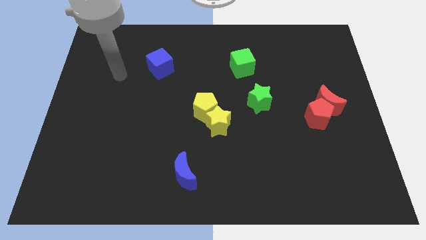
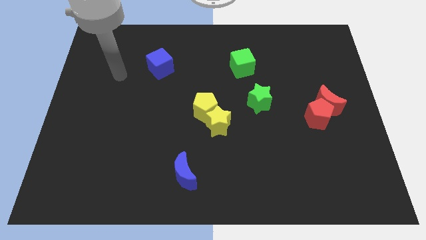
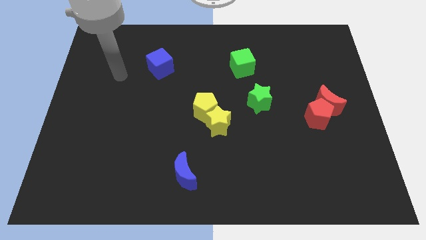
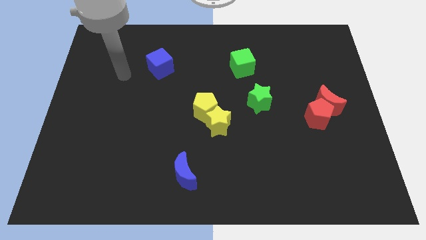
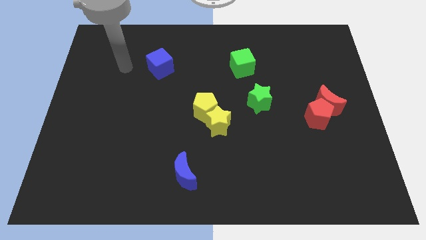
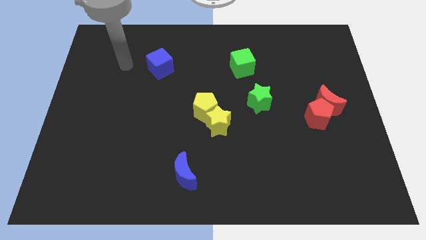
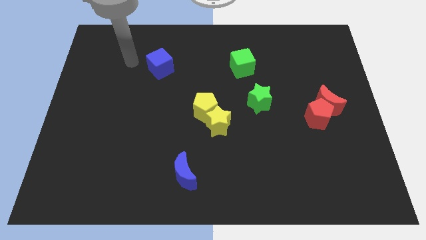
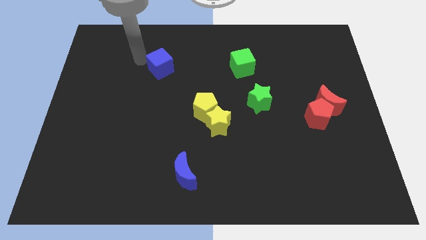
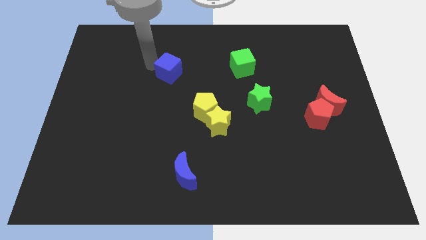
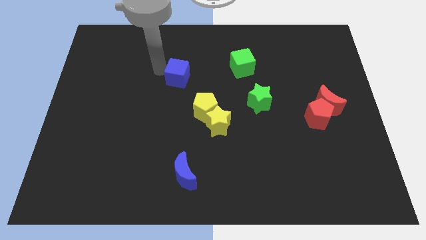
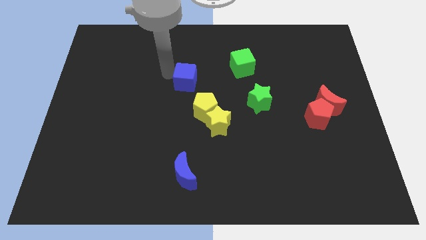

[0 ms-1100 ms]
move blue cube slightly to the right

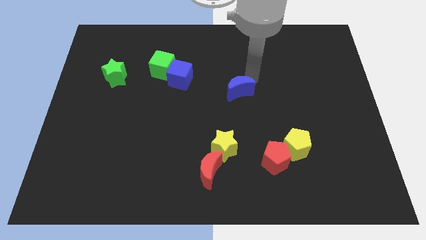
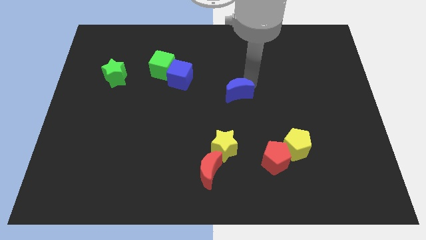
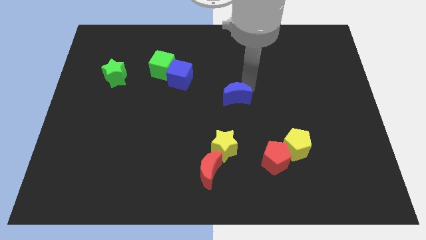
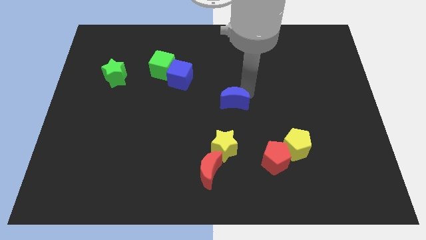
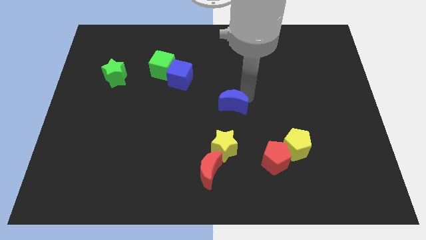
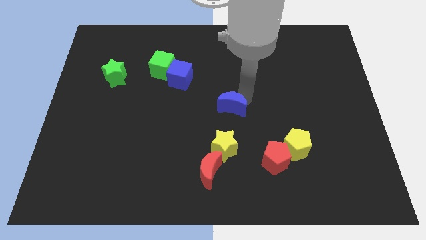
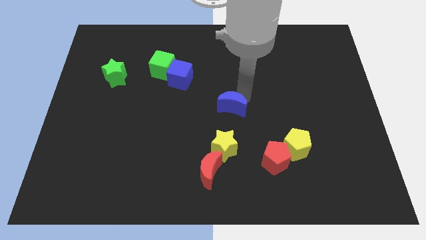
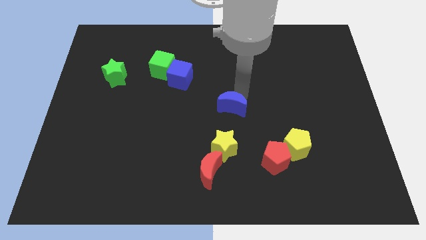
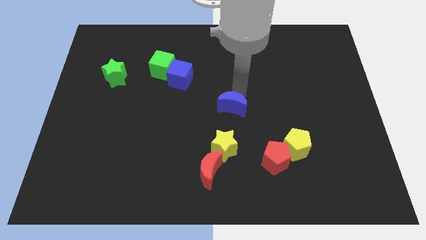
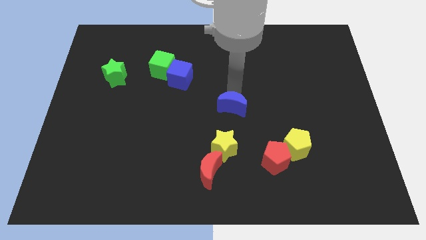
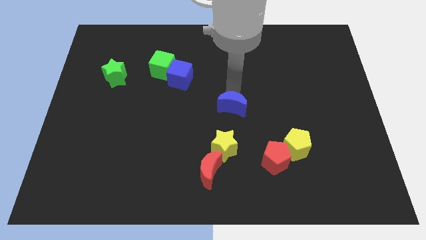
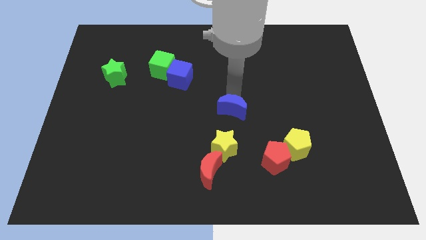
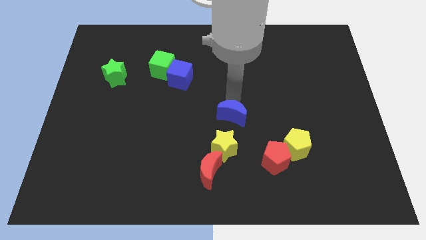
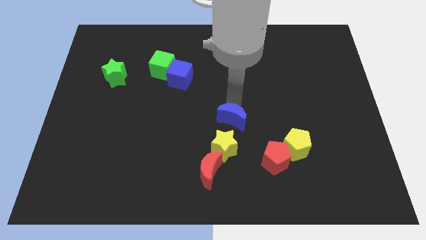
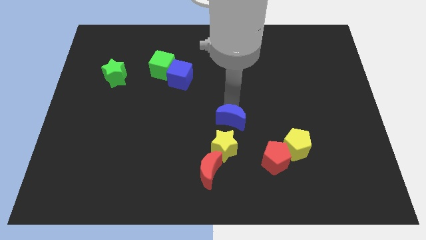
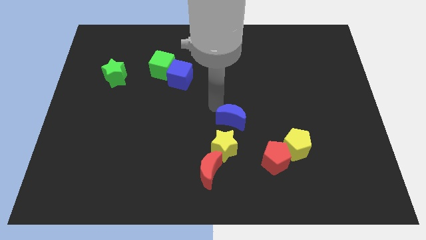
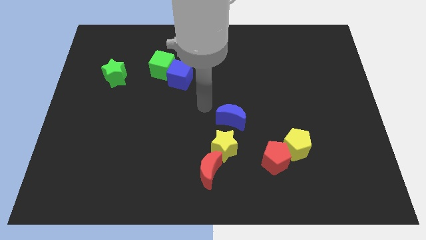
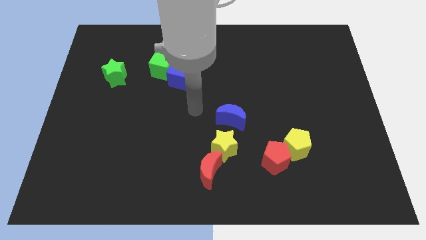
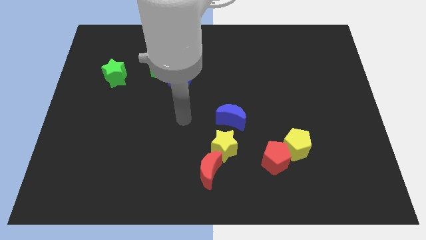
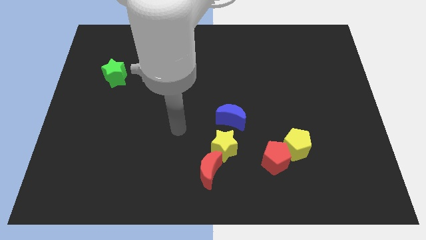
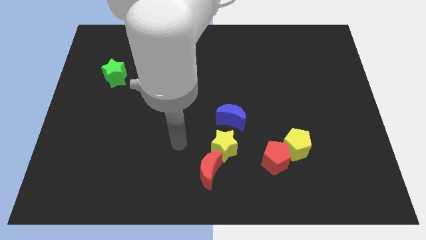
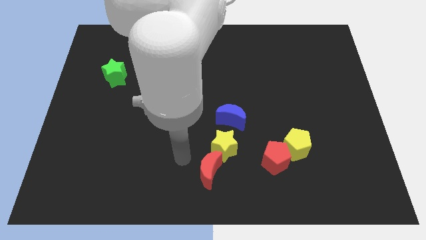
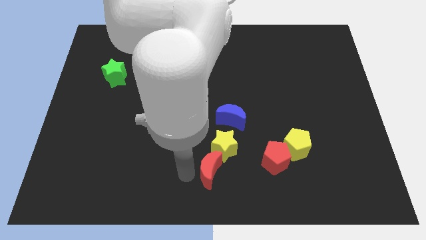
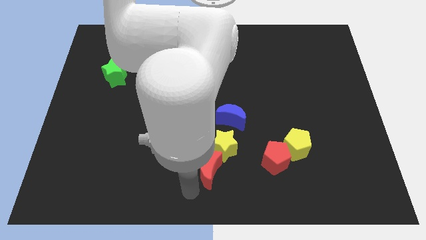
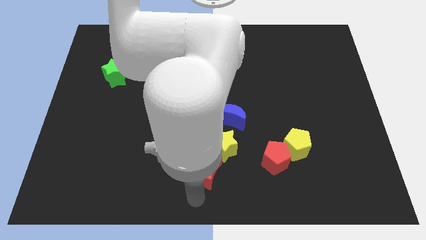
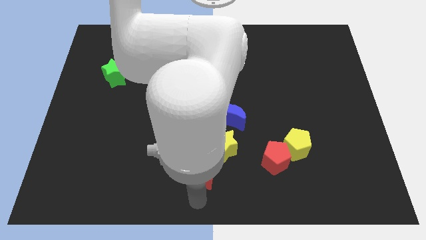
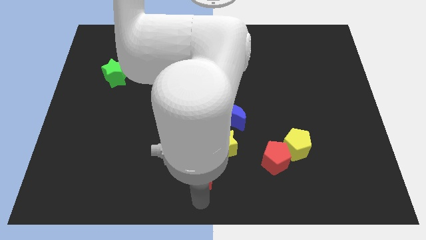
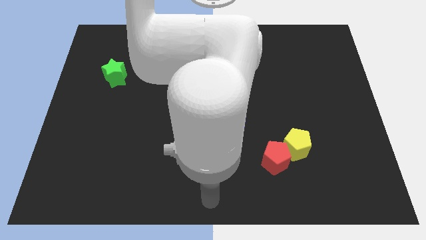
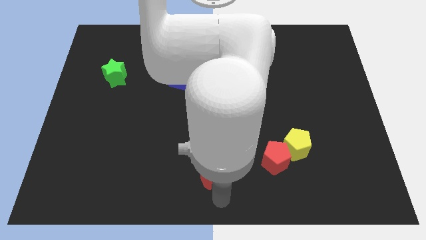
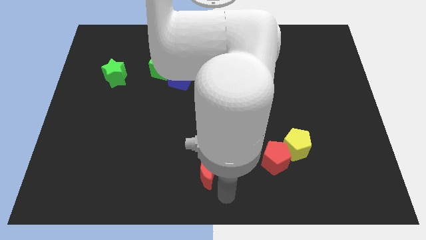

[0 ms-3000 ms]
push blue moon above yellow star

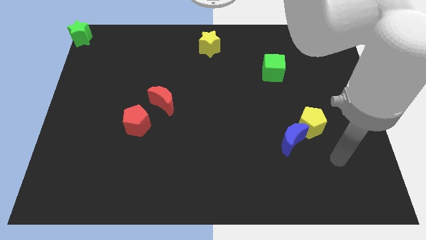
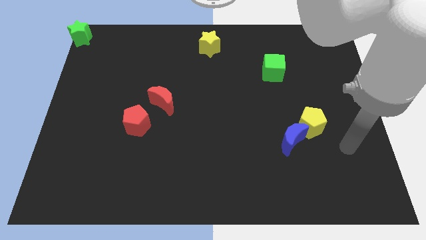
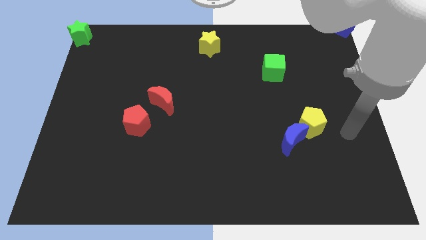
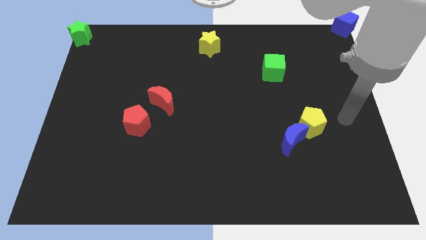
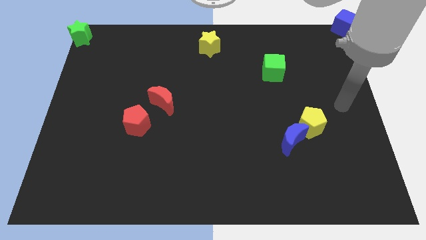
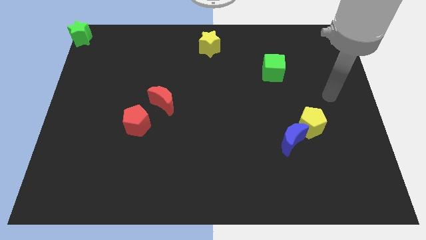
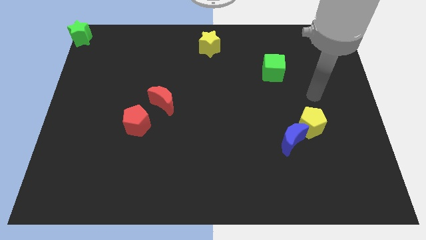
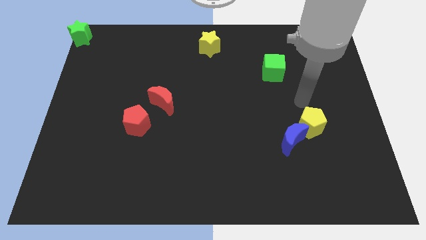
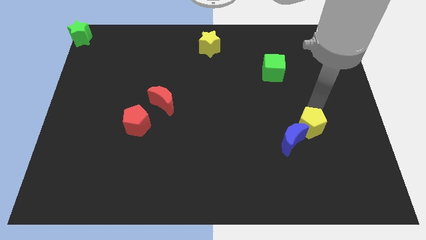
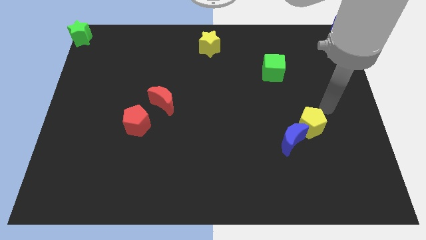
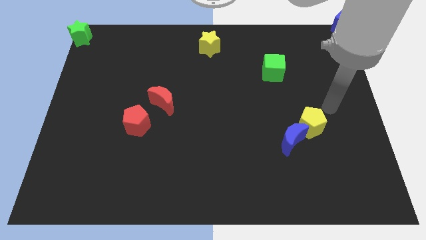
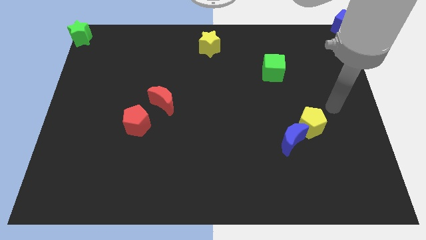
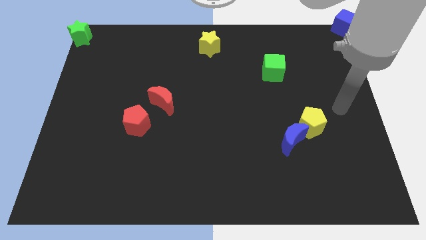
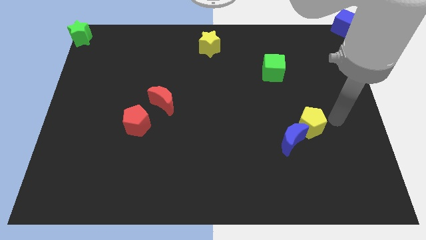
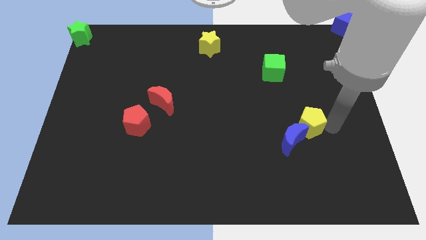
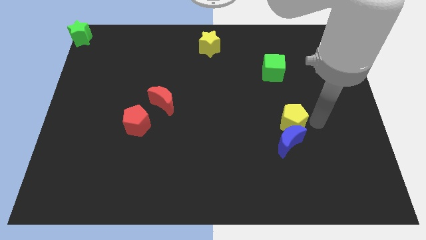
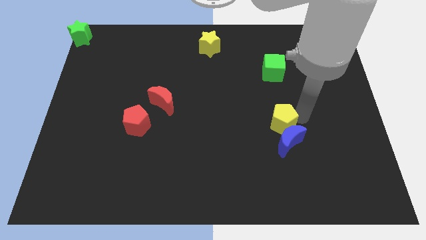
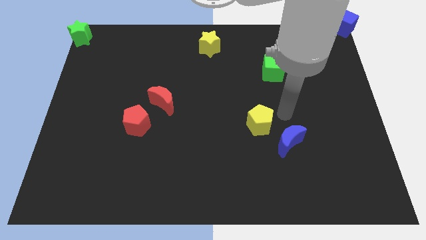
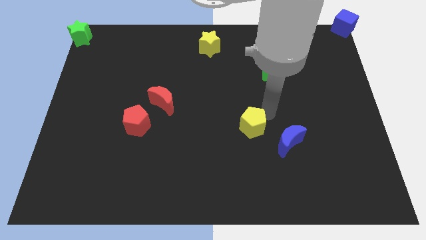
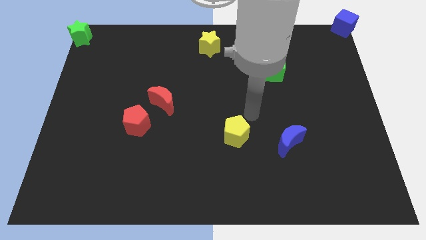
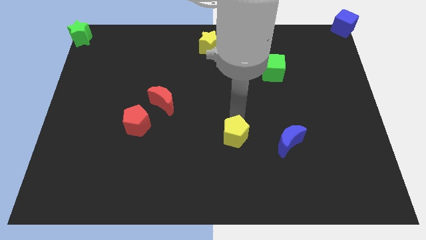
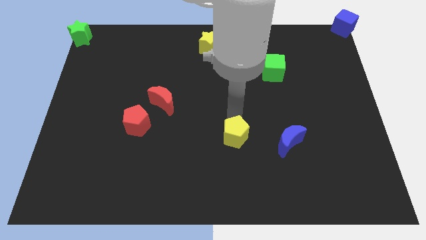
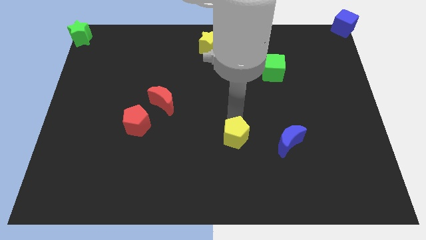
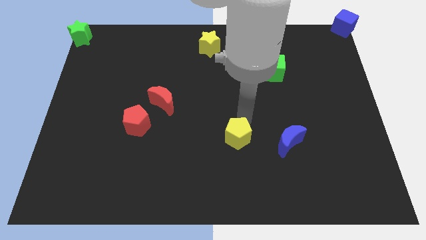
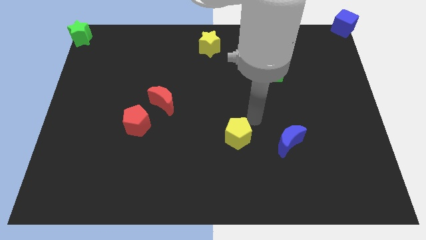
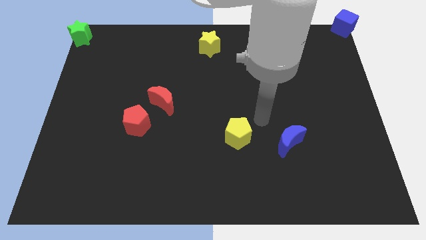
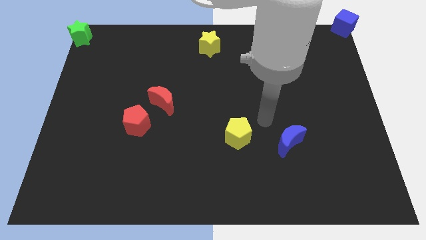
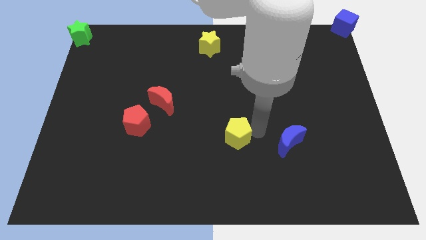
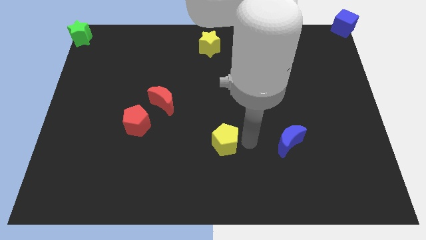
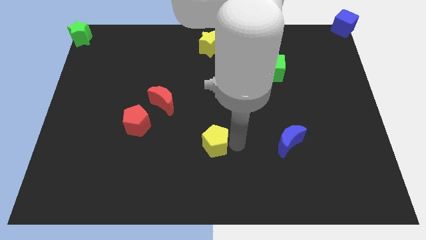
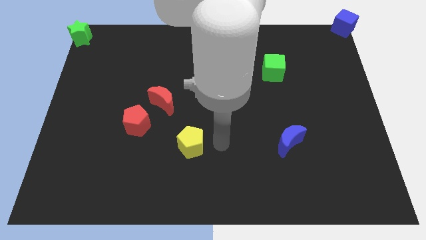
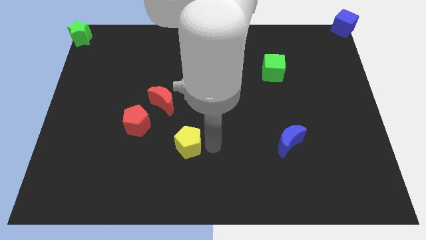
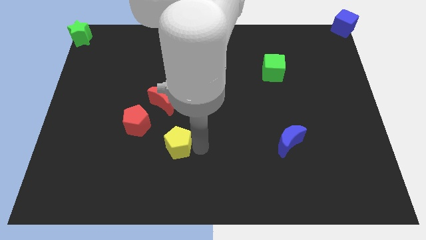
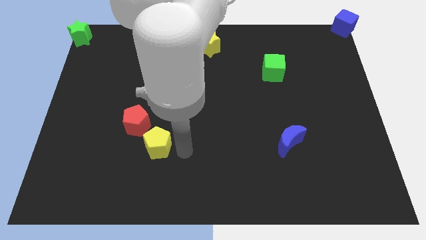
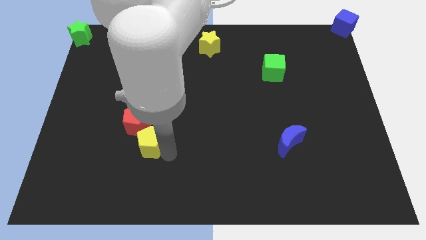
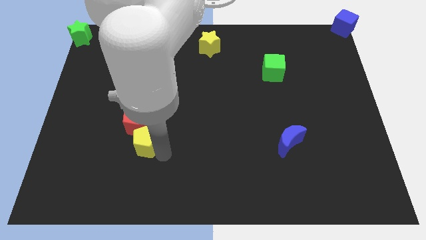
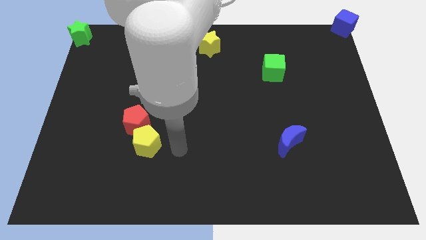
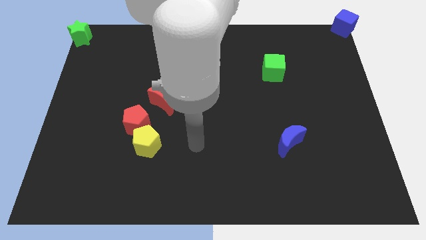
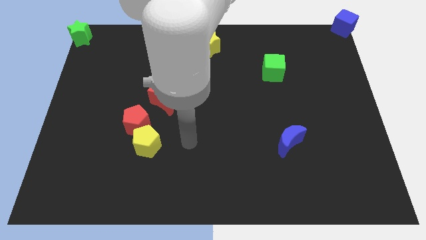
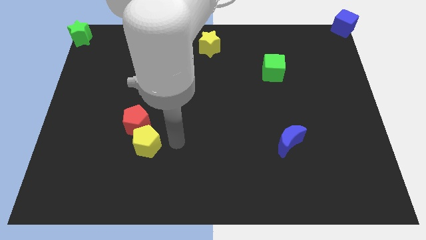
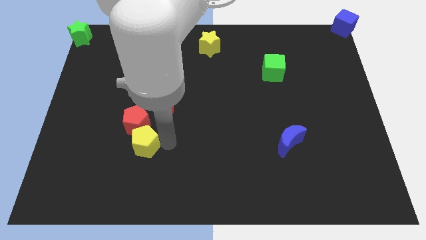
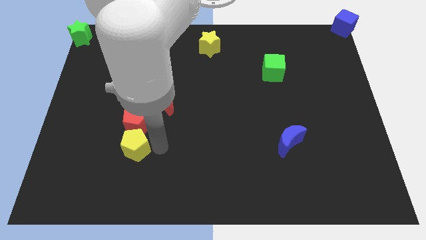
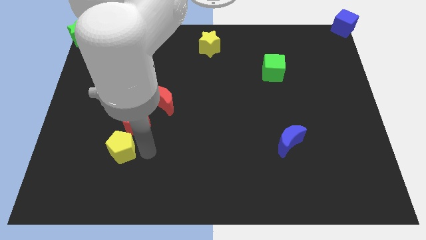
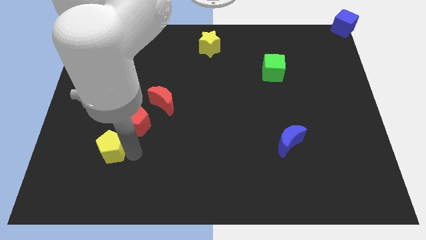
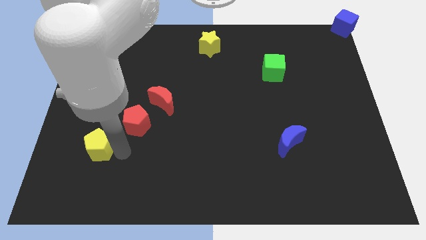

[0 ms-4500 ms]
separate the yellow pentagon and the blue moon

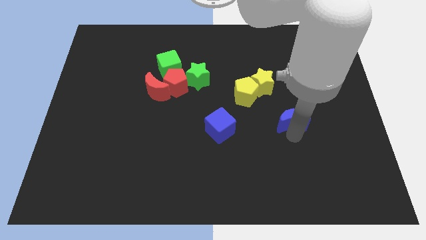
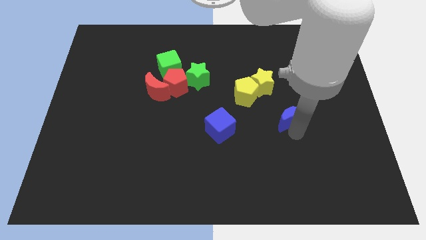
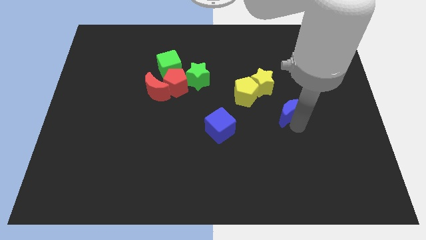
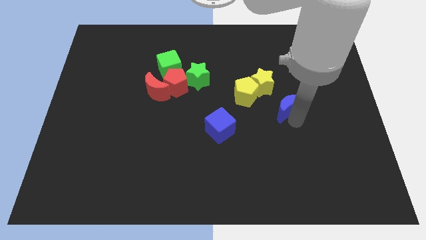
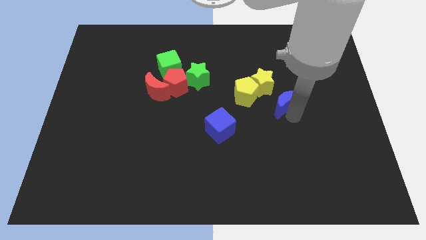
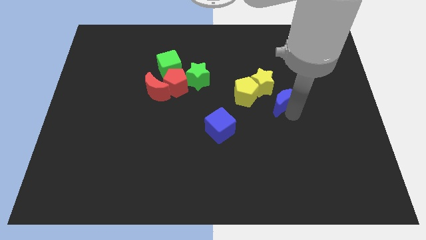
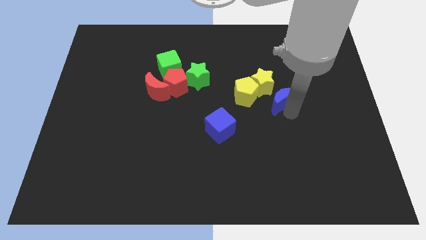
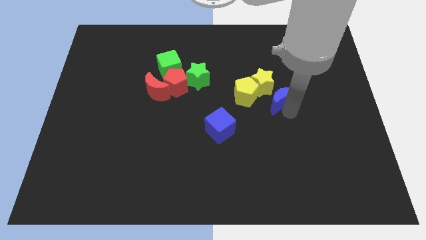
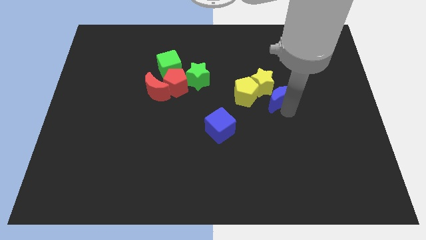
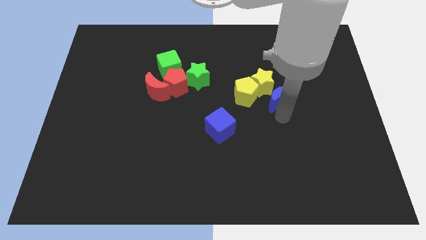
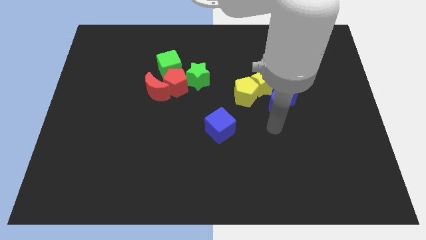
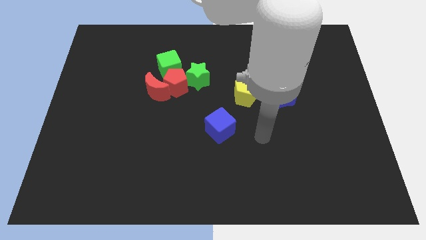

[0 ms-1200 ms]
push the blue moon towards the yellow star
